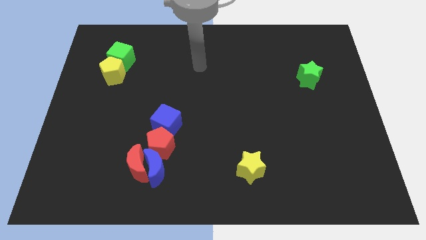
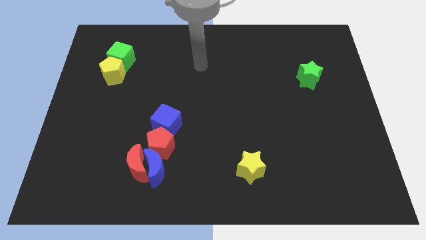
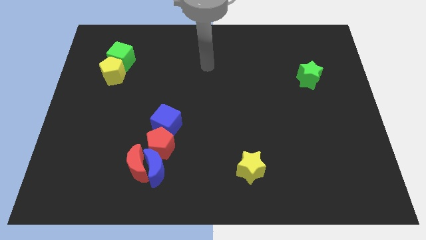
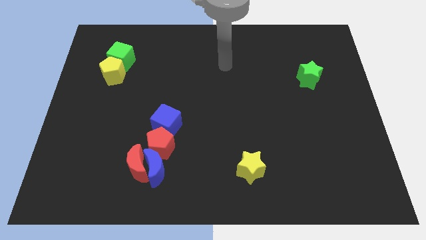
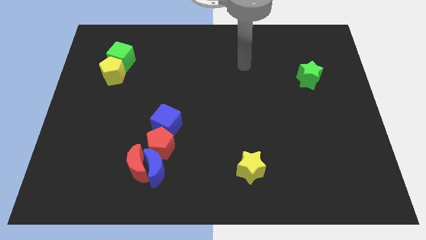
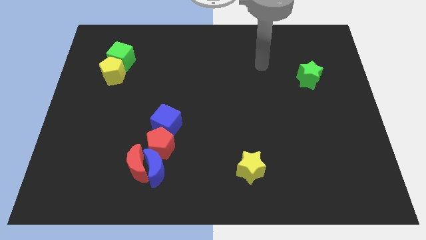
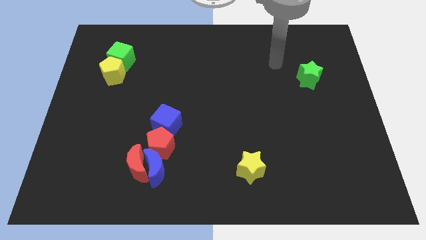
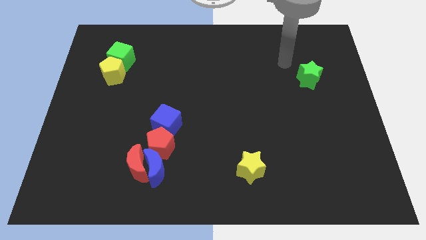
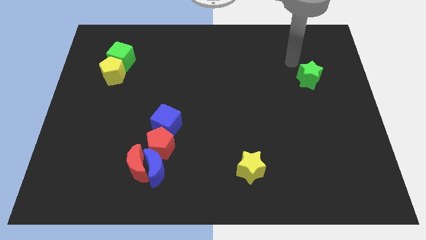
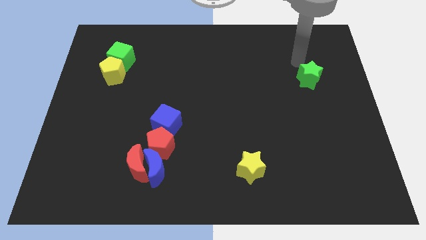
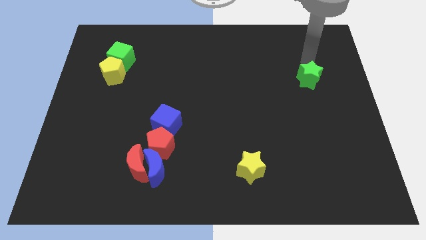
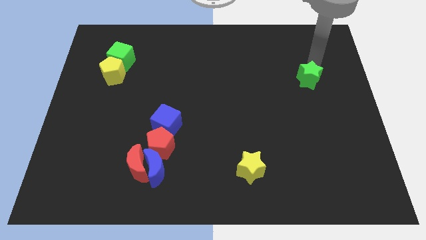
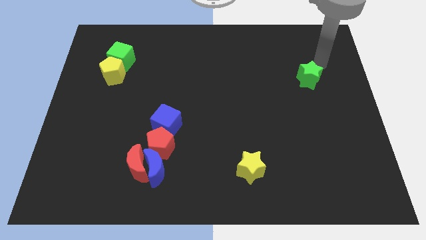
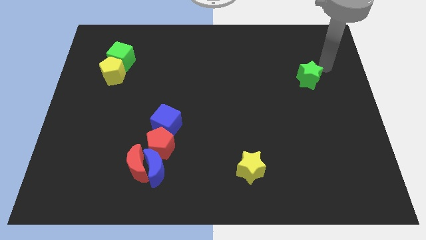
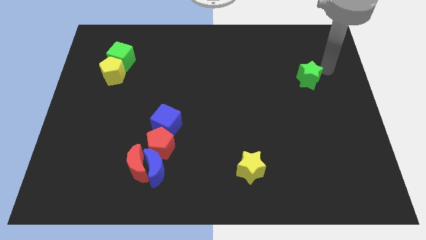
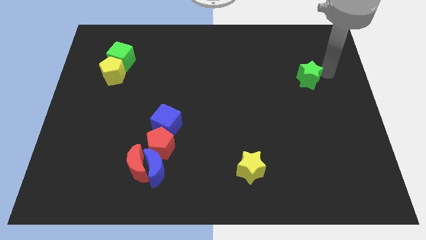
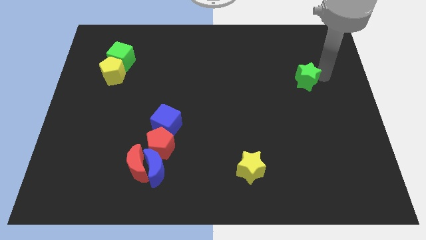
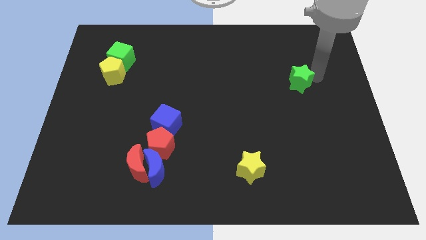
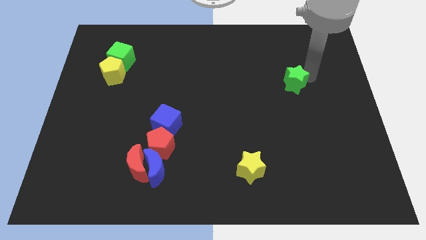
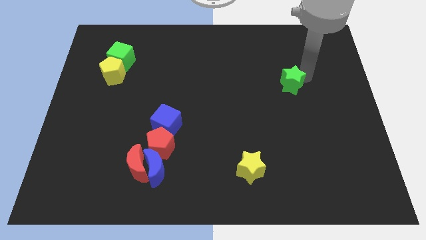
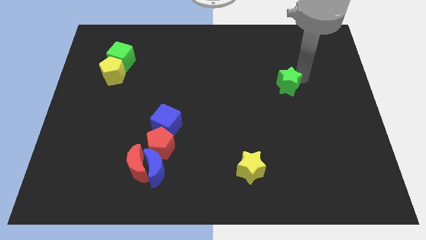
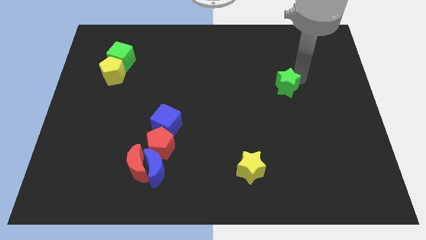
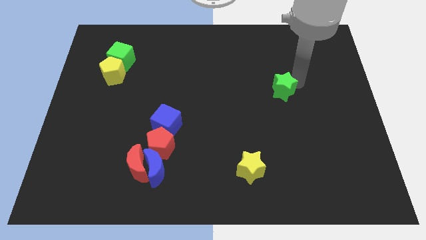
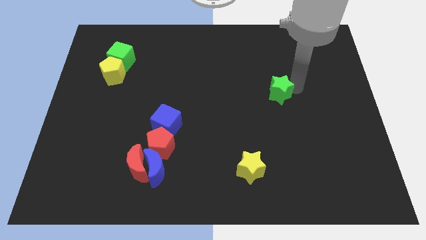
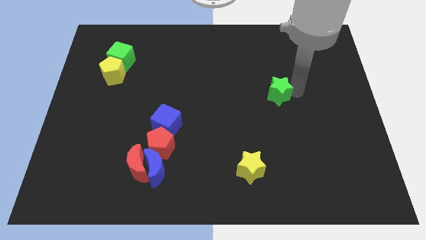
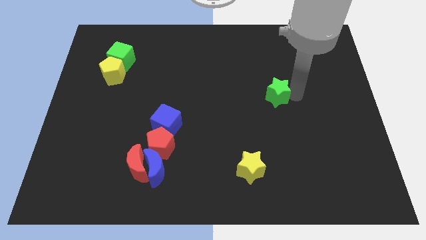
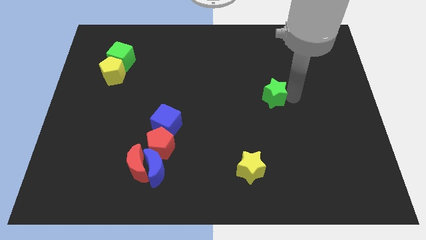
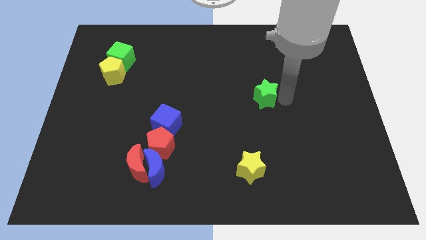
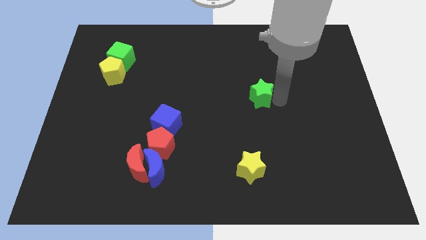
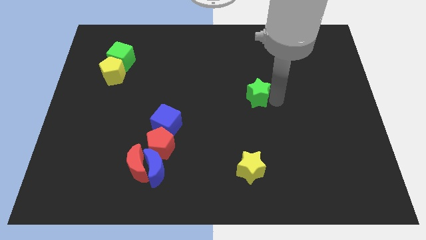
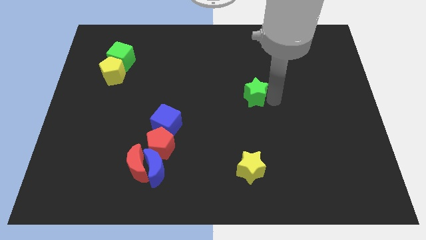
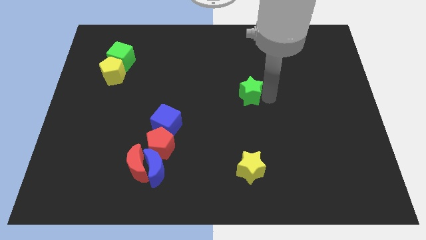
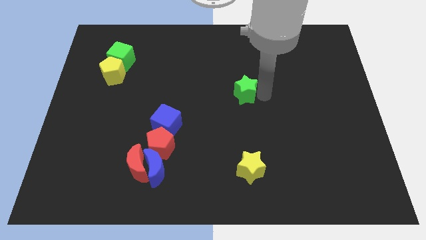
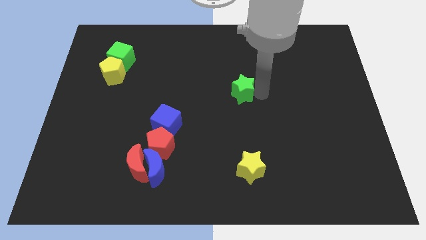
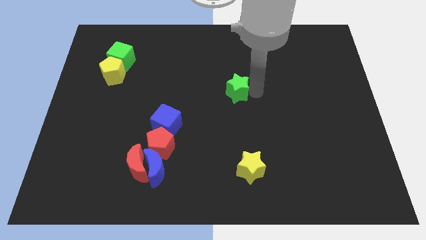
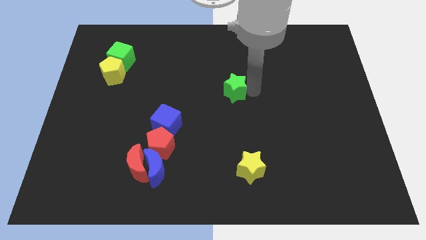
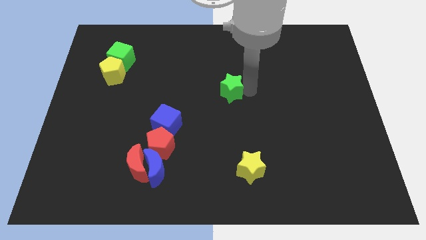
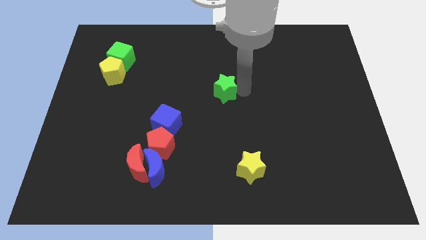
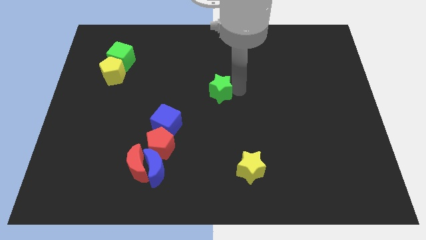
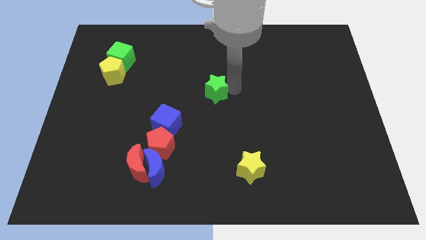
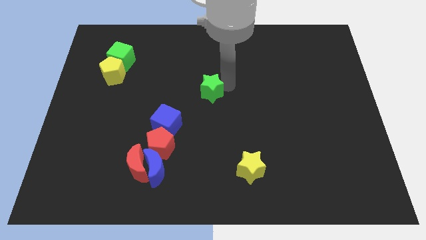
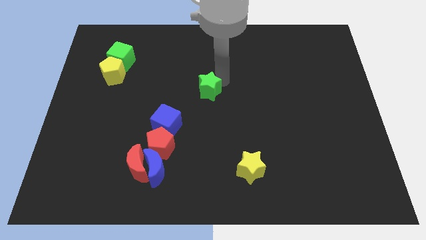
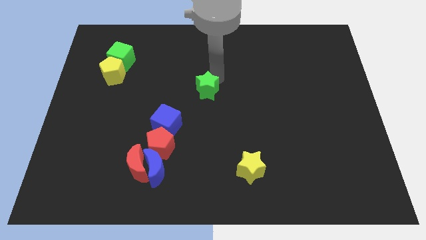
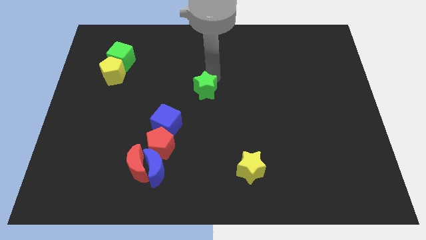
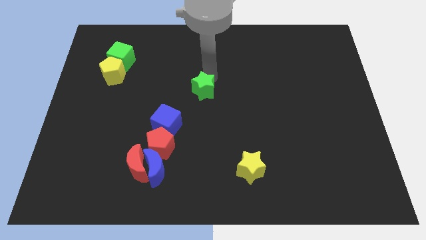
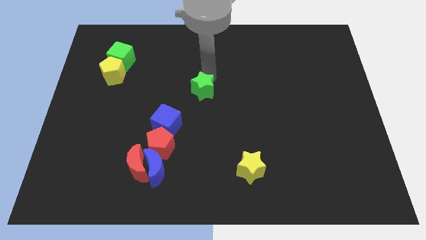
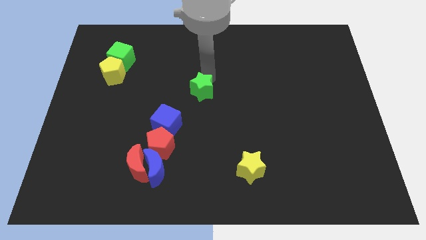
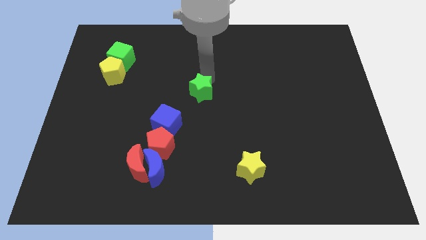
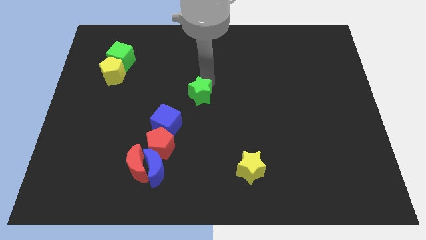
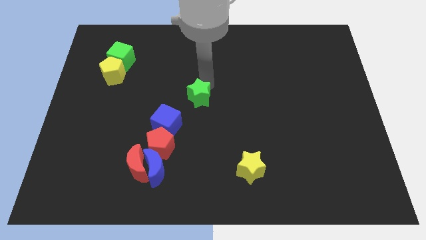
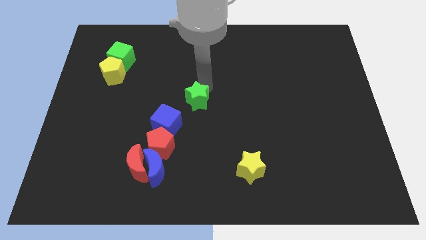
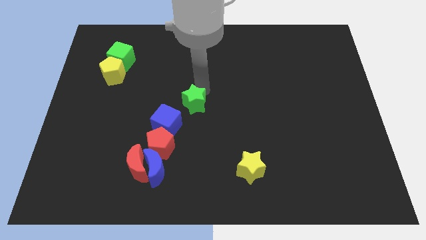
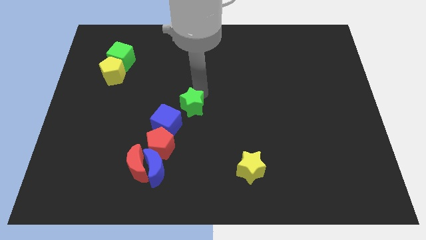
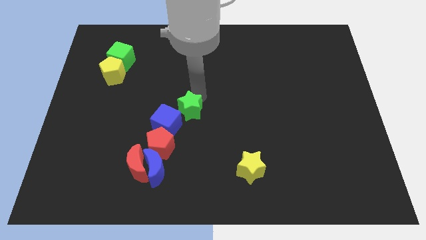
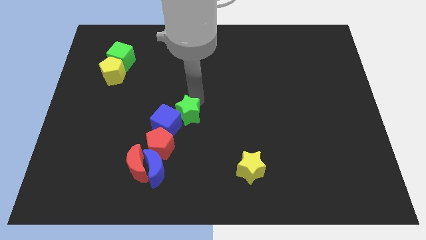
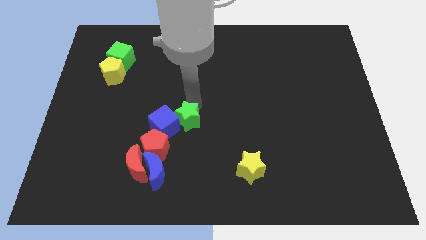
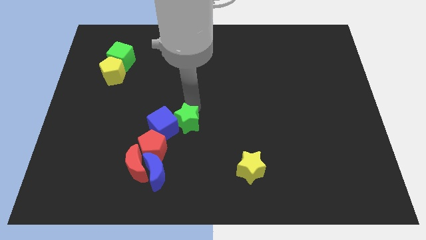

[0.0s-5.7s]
put the green star next to the blue cube

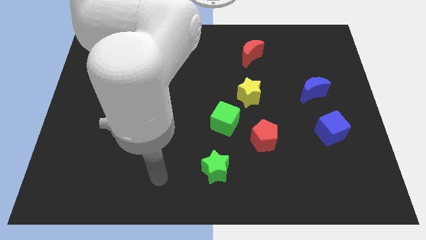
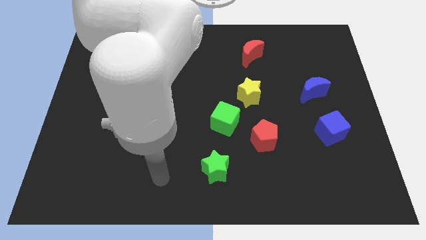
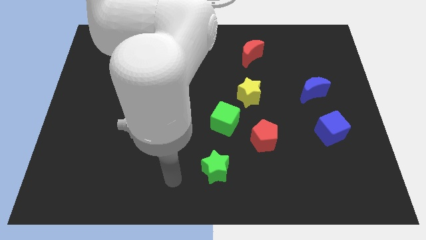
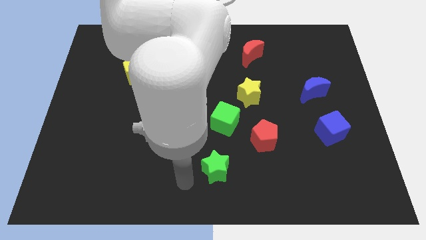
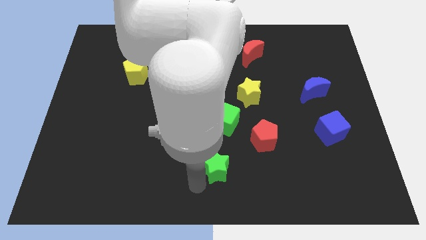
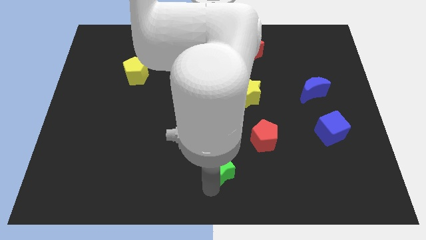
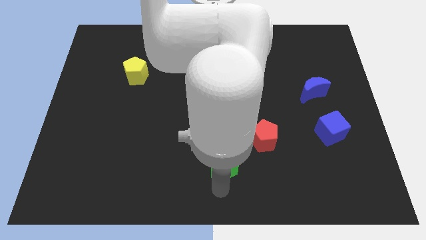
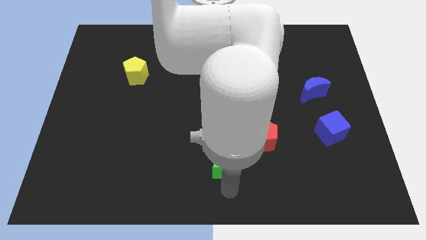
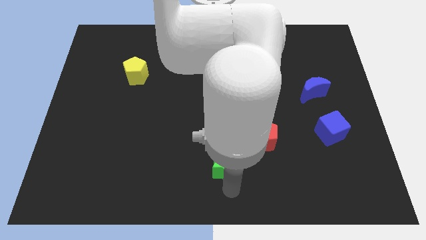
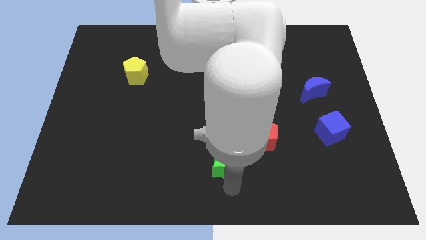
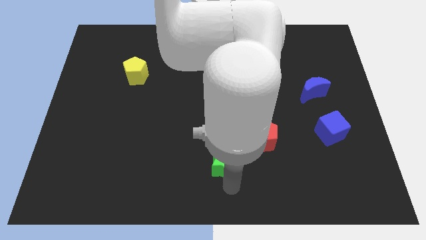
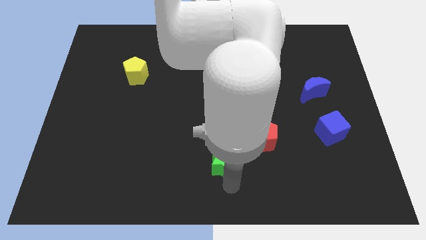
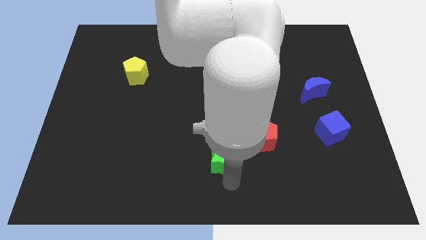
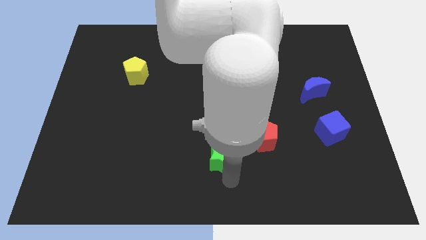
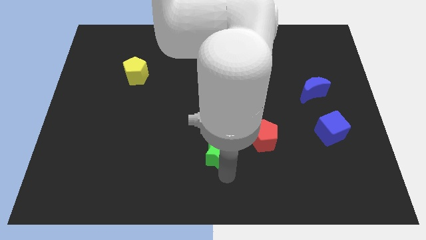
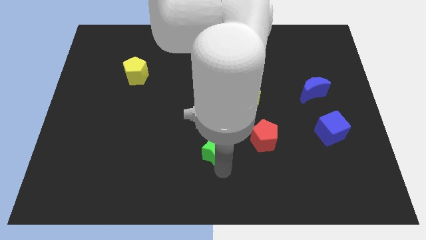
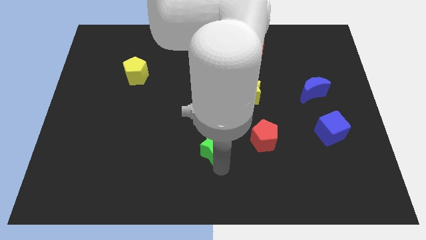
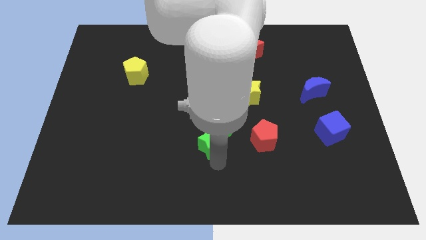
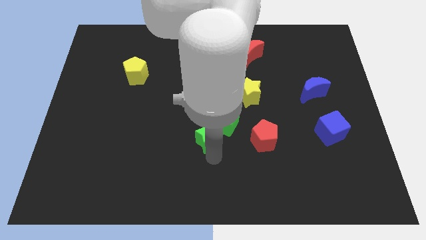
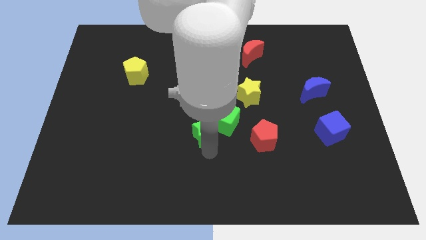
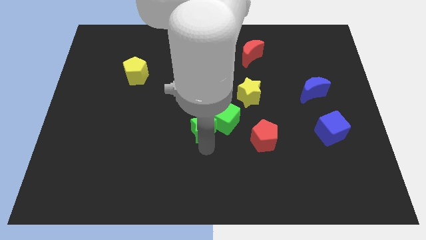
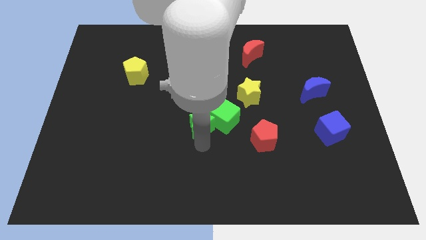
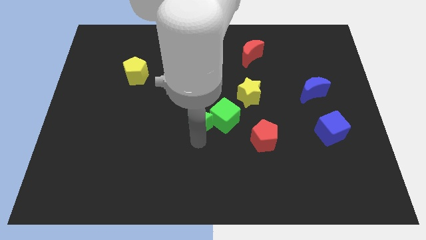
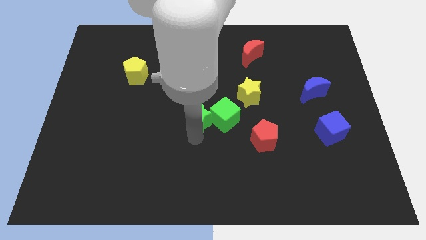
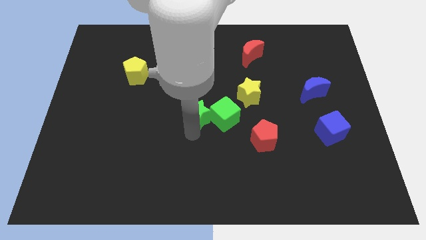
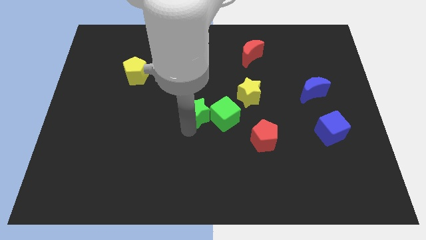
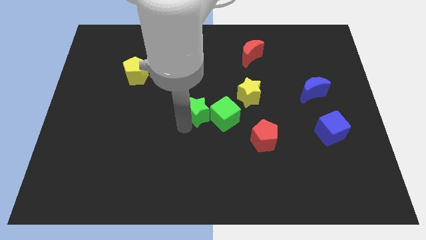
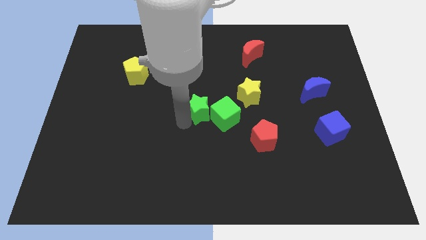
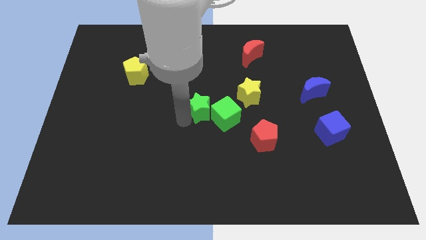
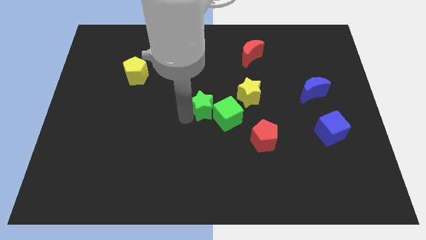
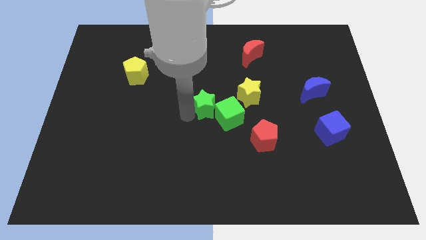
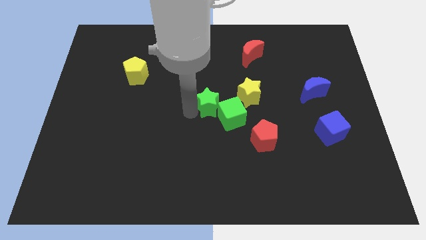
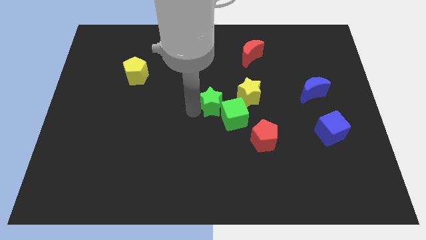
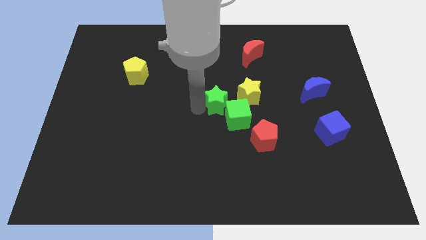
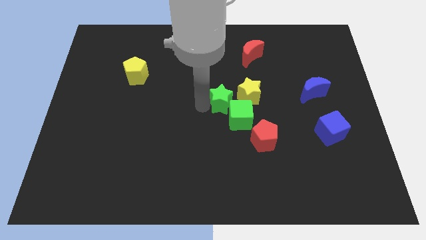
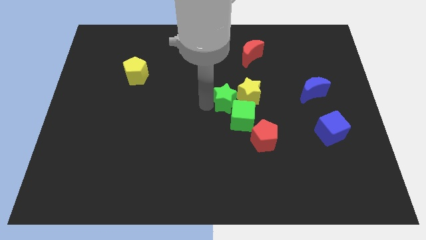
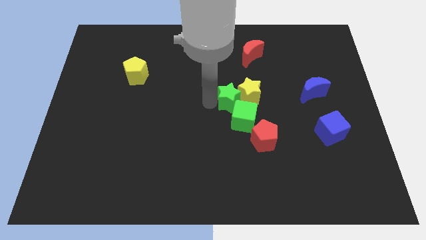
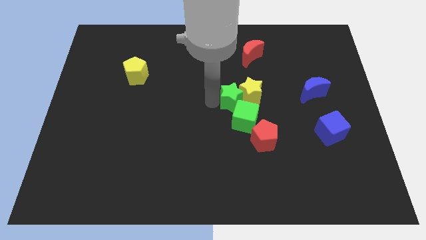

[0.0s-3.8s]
push the green star towards the yellow star
